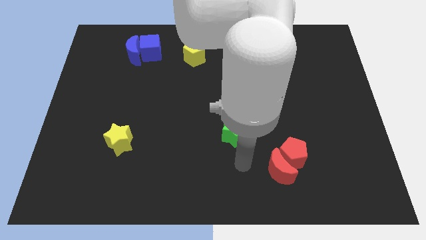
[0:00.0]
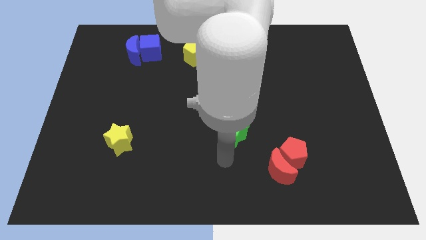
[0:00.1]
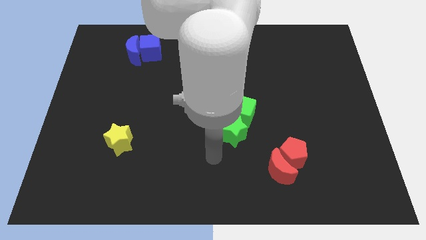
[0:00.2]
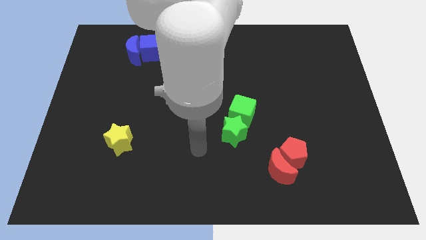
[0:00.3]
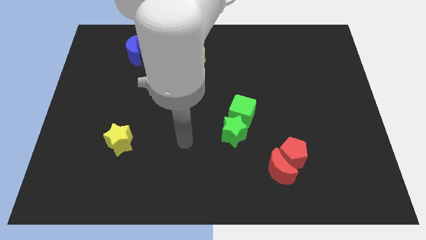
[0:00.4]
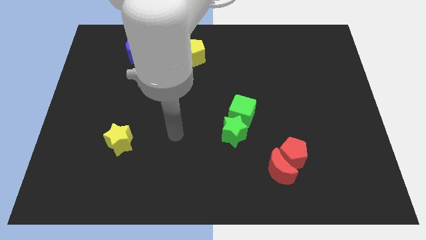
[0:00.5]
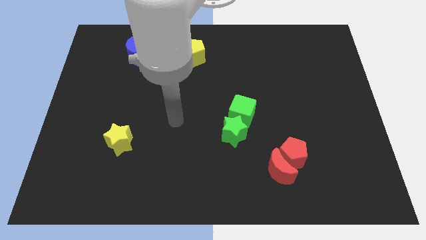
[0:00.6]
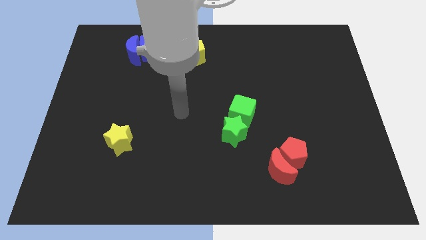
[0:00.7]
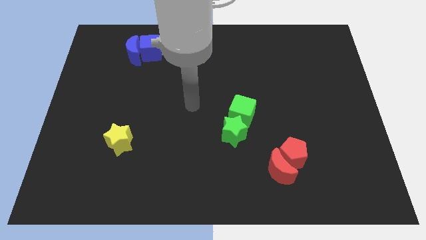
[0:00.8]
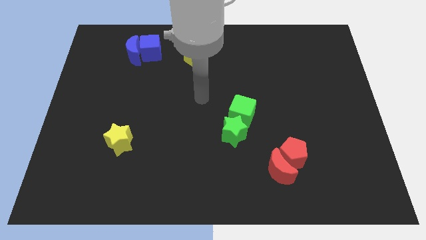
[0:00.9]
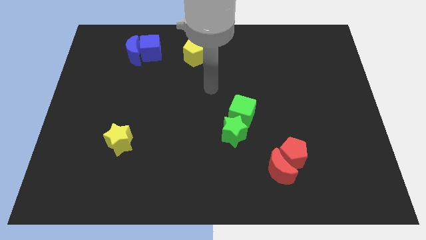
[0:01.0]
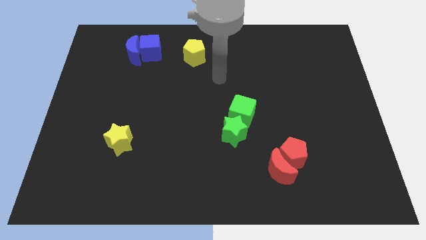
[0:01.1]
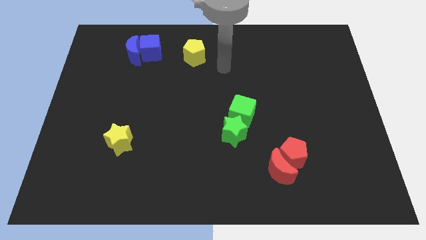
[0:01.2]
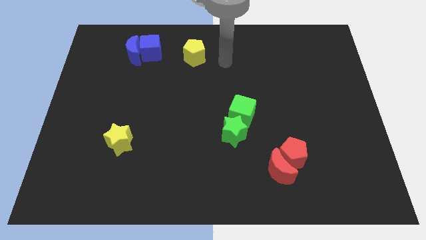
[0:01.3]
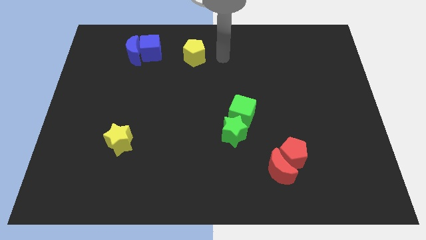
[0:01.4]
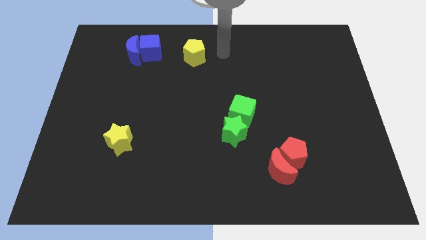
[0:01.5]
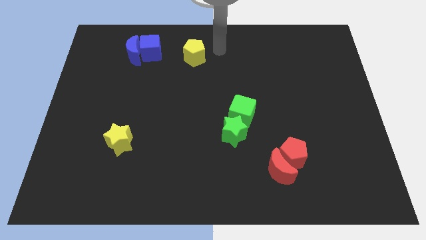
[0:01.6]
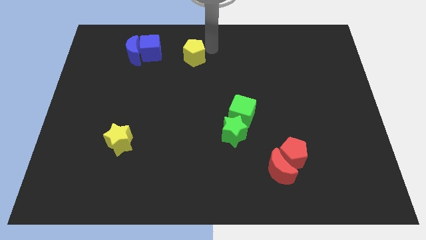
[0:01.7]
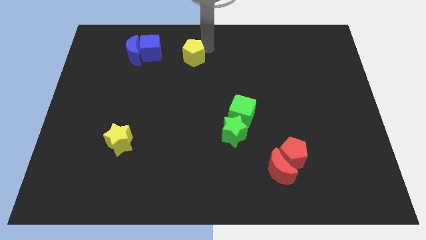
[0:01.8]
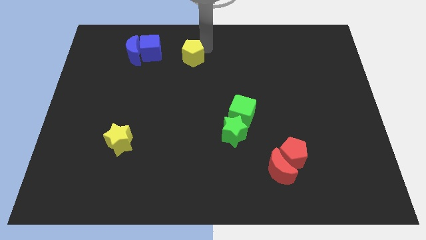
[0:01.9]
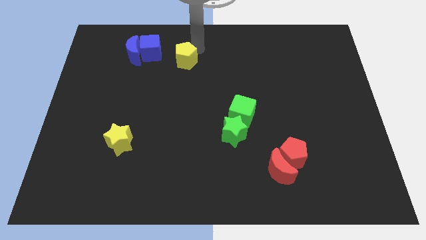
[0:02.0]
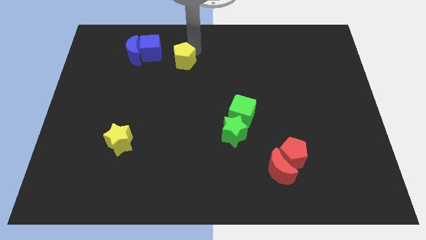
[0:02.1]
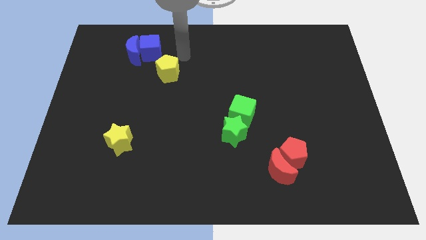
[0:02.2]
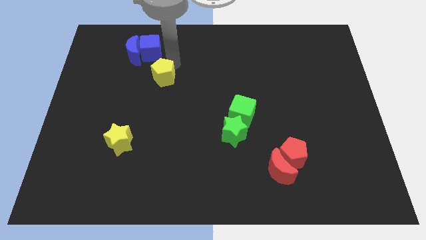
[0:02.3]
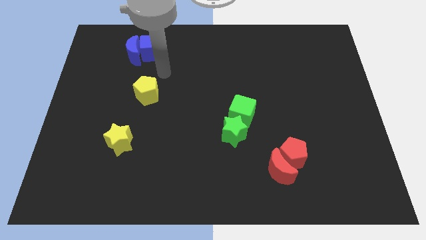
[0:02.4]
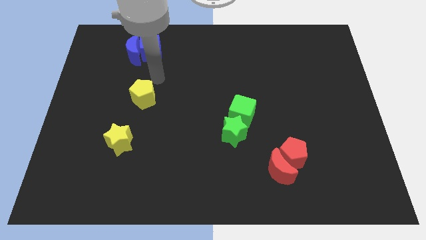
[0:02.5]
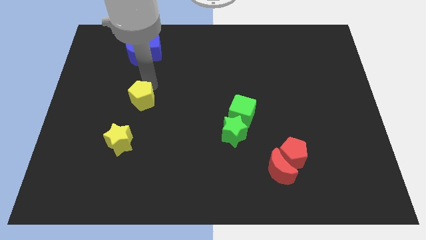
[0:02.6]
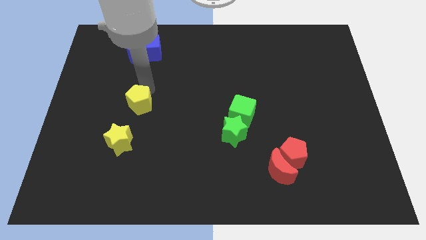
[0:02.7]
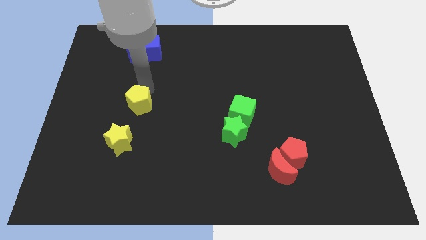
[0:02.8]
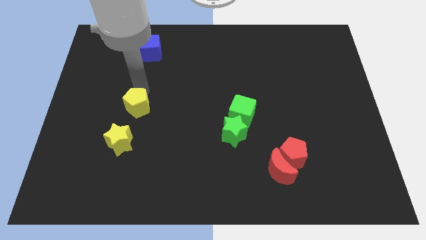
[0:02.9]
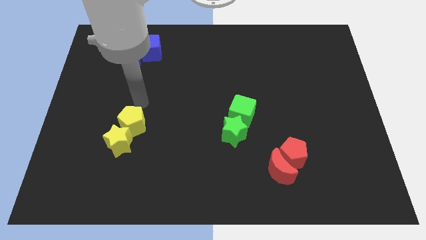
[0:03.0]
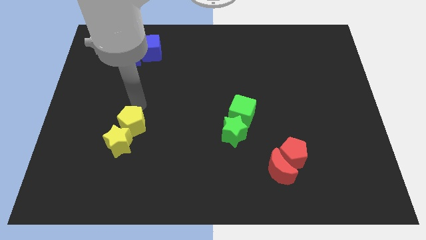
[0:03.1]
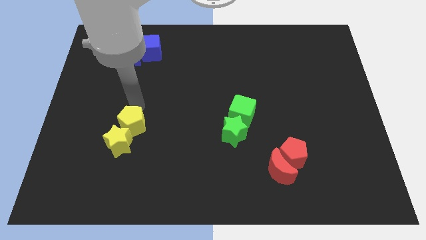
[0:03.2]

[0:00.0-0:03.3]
slide the yellow pentagon into the yellow star

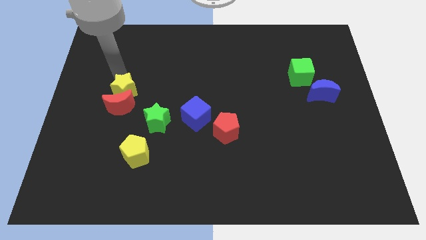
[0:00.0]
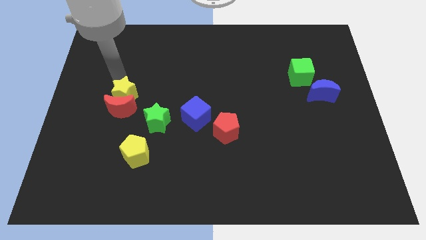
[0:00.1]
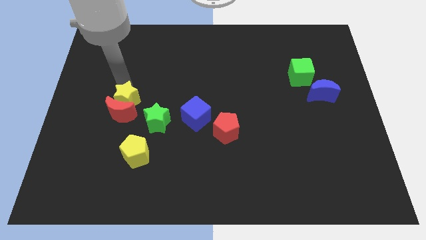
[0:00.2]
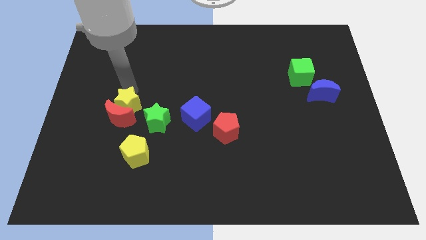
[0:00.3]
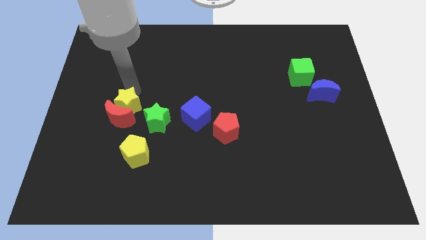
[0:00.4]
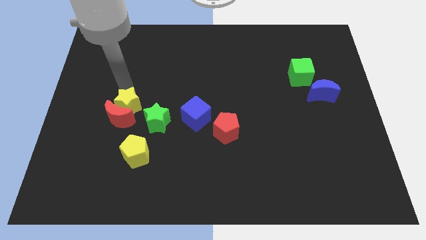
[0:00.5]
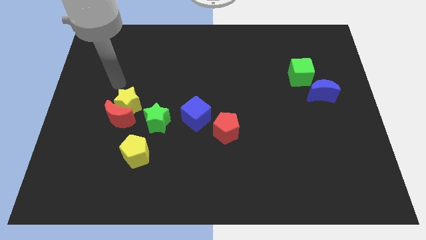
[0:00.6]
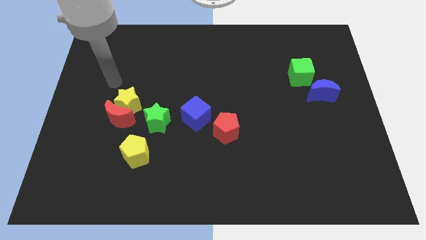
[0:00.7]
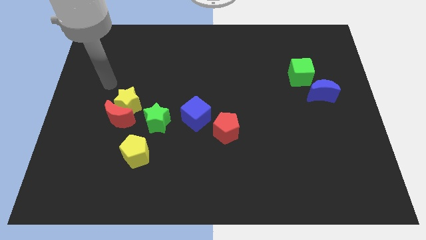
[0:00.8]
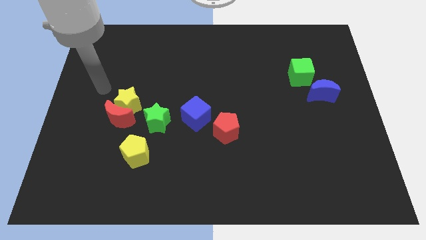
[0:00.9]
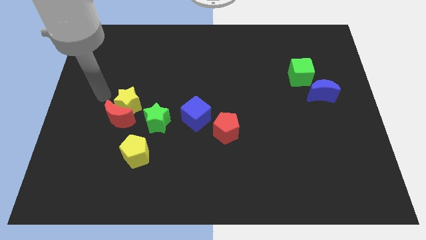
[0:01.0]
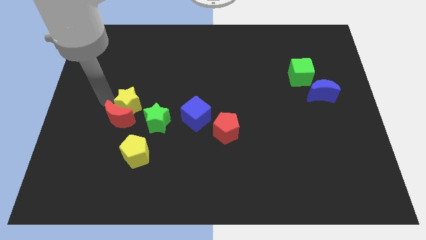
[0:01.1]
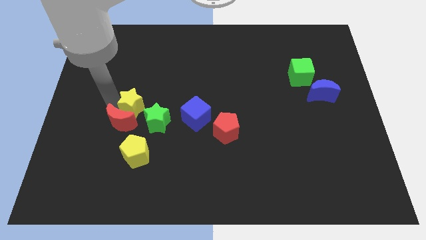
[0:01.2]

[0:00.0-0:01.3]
drag the yellow star slightly downwards

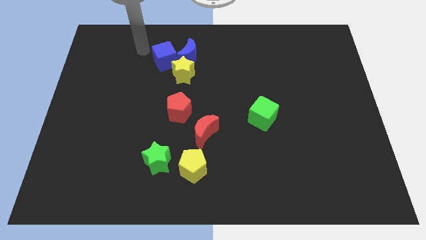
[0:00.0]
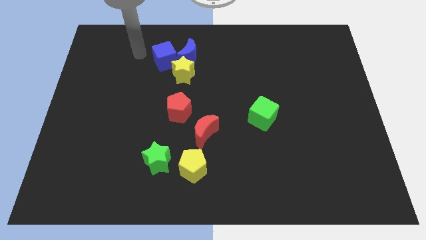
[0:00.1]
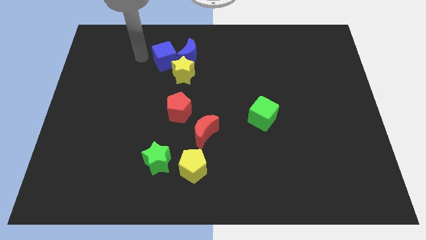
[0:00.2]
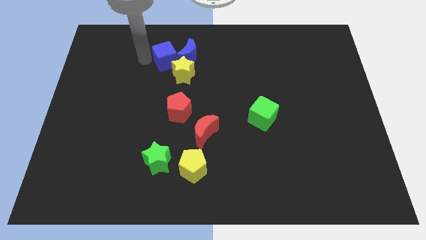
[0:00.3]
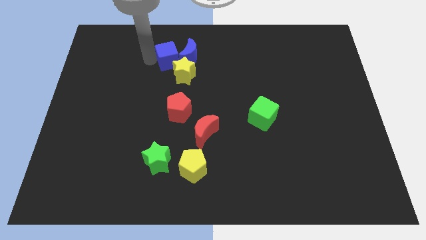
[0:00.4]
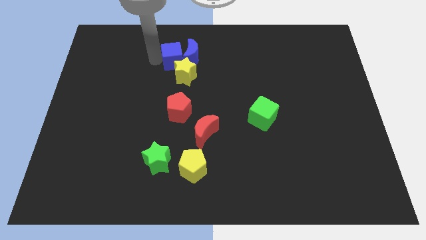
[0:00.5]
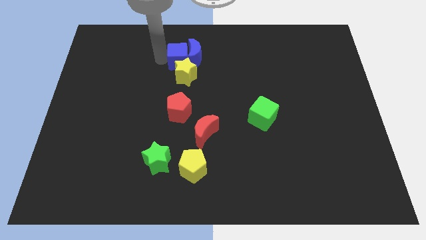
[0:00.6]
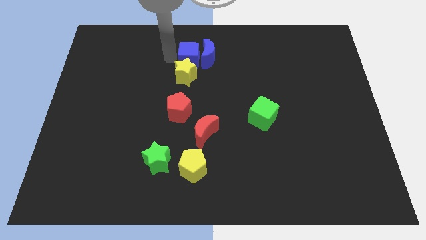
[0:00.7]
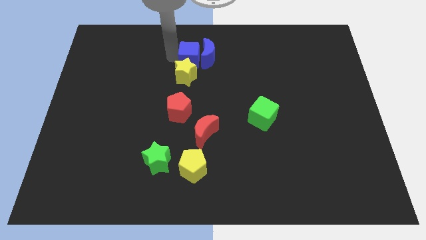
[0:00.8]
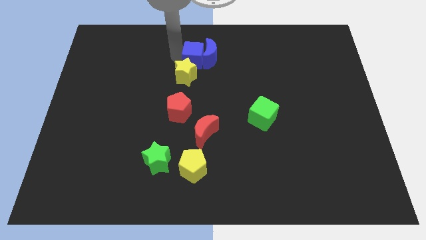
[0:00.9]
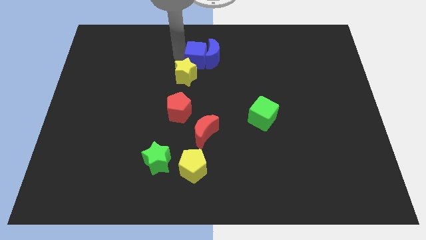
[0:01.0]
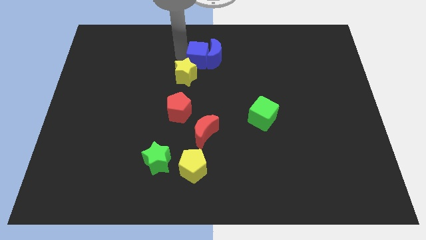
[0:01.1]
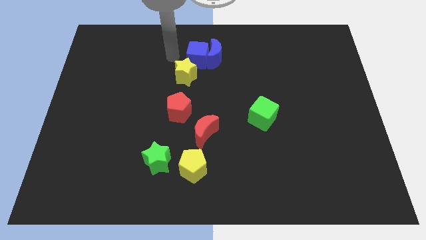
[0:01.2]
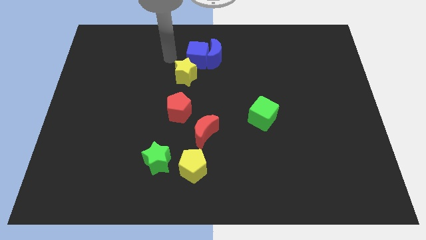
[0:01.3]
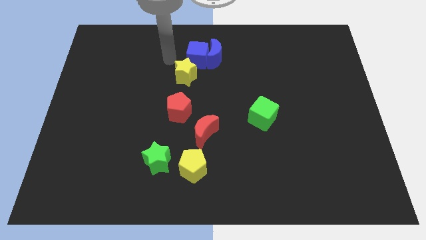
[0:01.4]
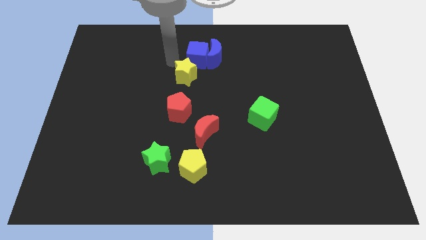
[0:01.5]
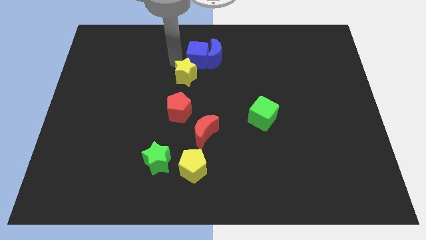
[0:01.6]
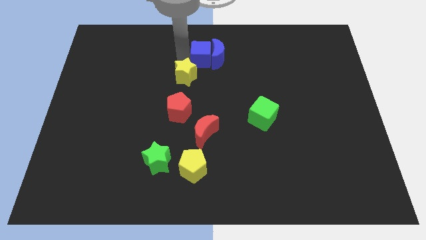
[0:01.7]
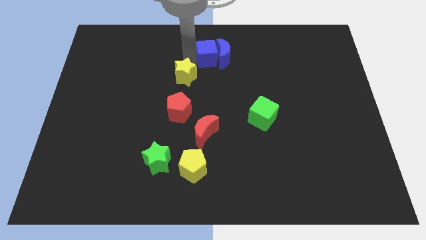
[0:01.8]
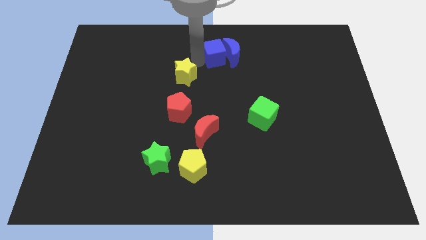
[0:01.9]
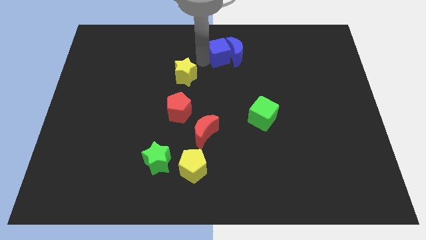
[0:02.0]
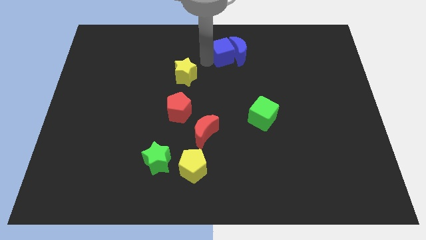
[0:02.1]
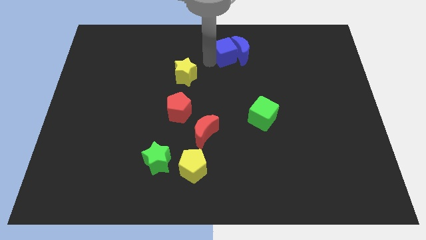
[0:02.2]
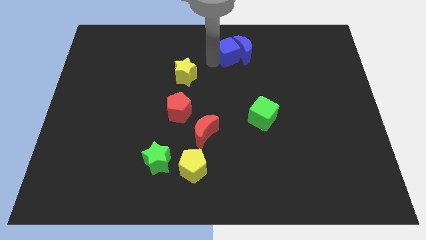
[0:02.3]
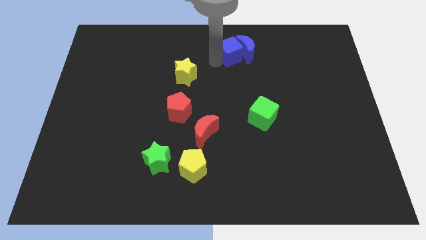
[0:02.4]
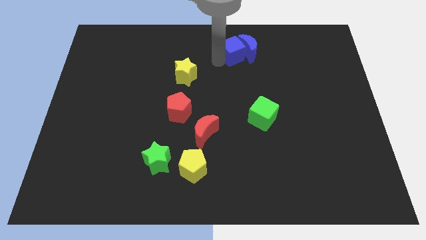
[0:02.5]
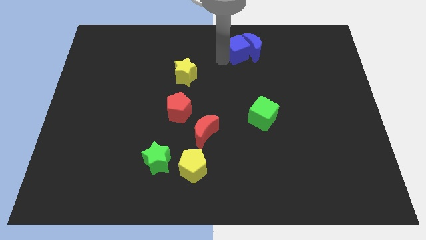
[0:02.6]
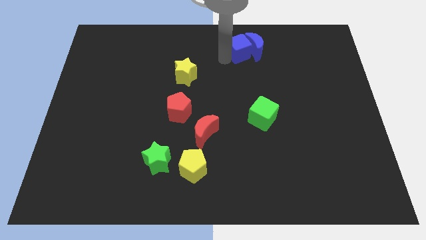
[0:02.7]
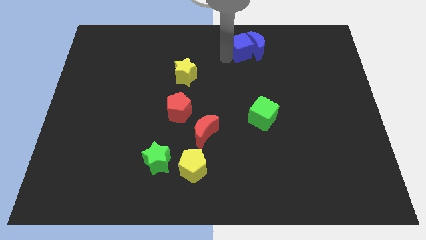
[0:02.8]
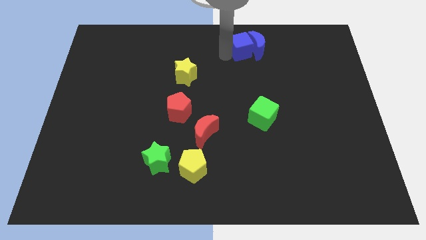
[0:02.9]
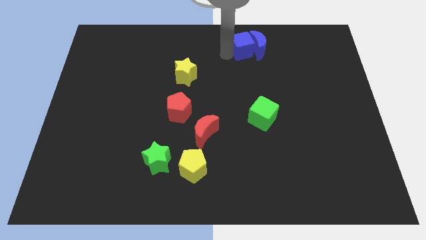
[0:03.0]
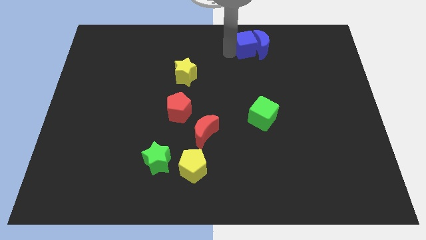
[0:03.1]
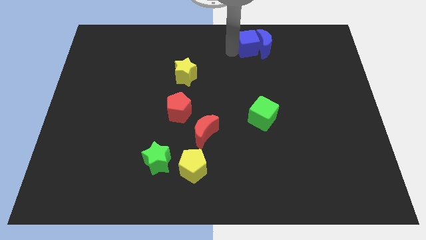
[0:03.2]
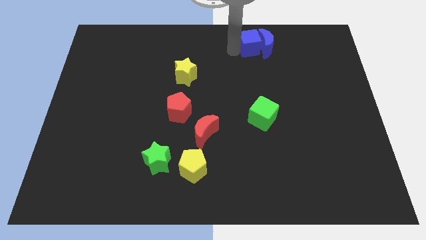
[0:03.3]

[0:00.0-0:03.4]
push the blue blocks towards the right side of the board

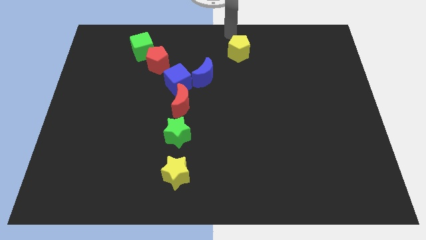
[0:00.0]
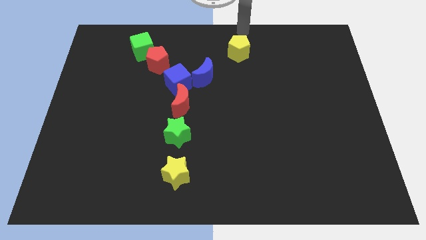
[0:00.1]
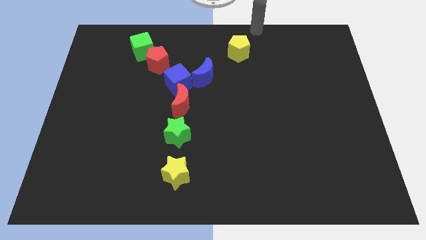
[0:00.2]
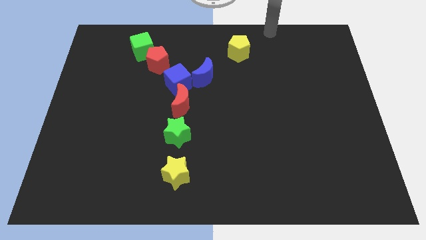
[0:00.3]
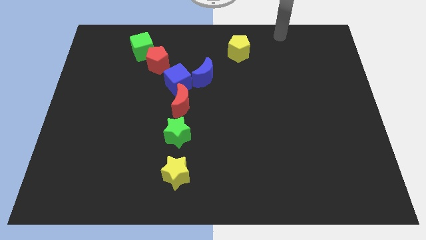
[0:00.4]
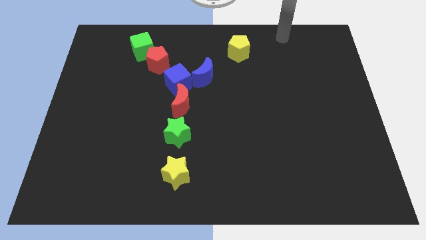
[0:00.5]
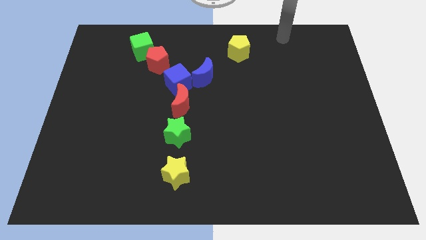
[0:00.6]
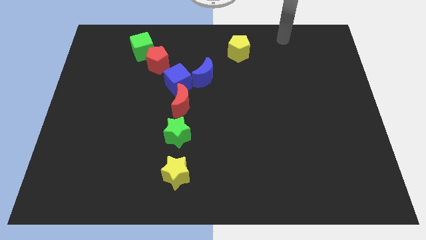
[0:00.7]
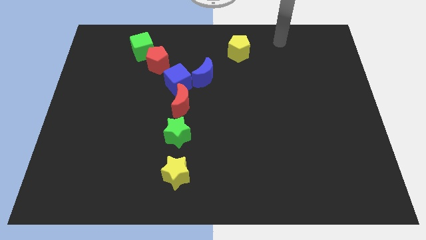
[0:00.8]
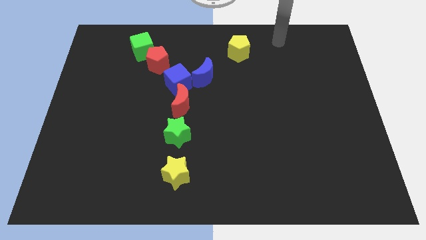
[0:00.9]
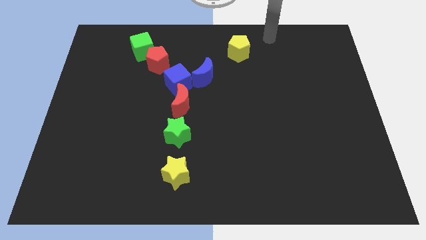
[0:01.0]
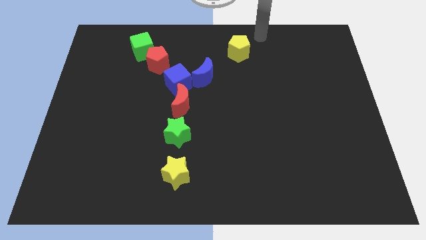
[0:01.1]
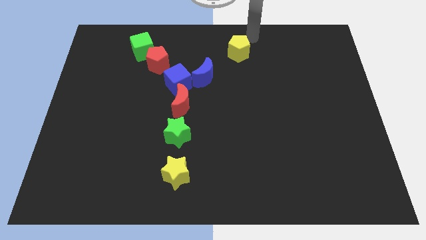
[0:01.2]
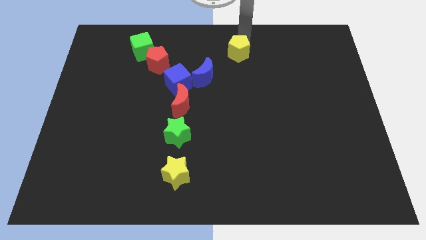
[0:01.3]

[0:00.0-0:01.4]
move your arm to the top side of the yellow pentagon
